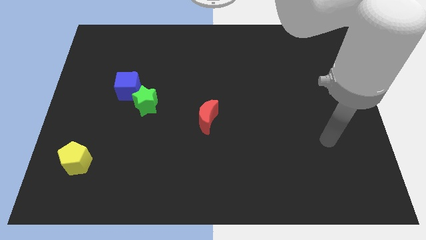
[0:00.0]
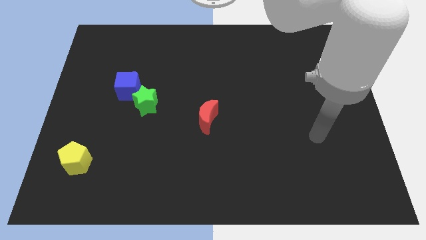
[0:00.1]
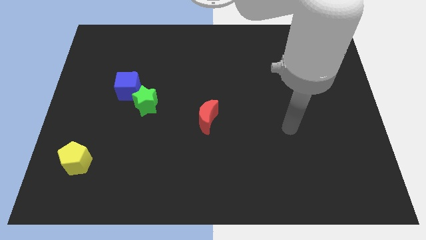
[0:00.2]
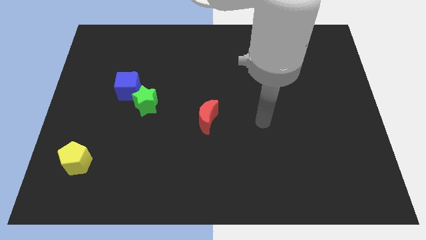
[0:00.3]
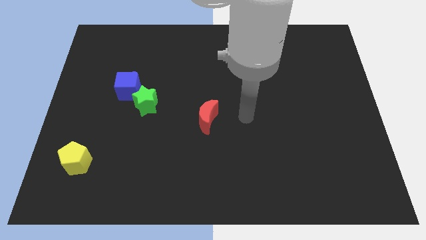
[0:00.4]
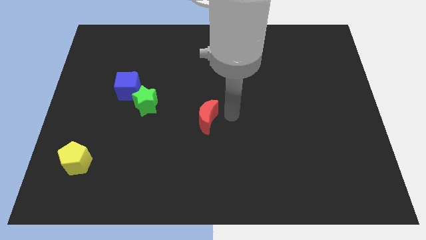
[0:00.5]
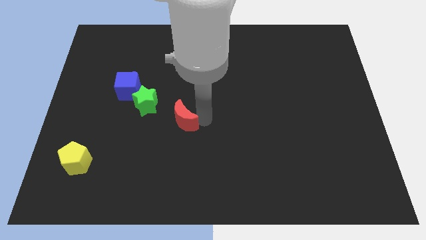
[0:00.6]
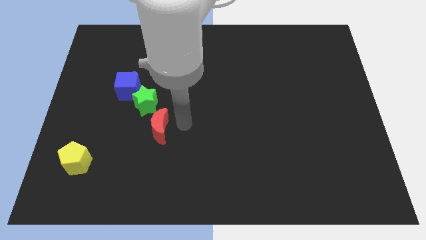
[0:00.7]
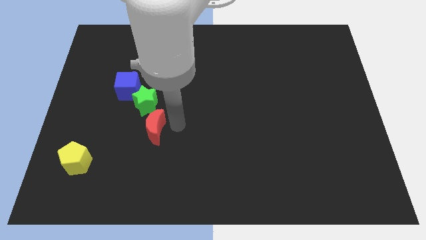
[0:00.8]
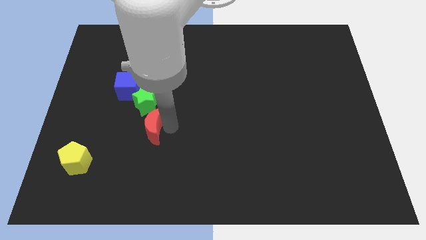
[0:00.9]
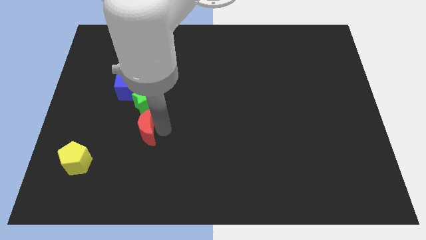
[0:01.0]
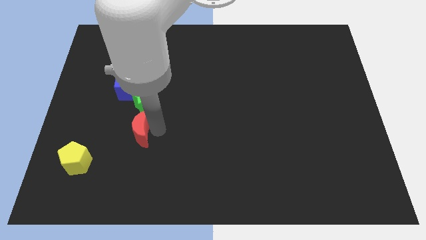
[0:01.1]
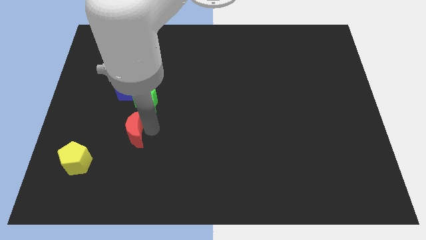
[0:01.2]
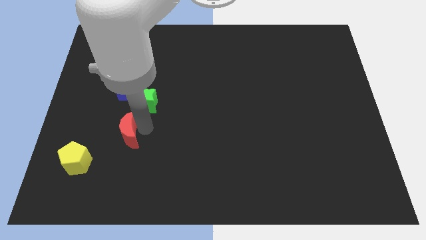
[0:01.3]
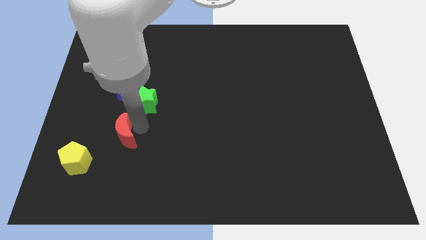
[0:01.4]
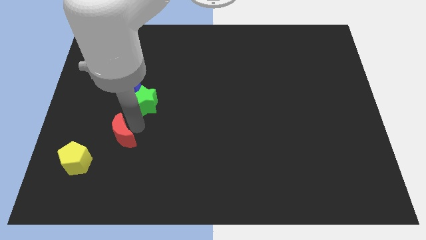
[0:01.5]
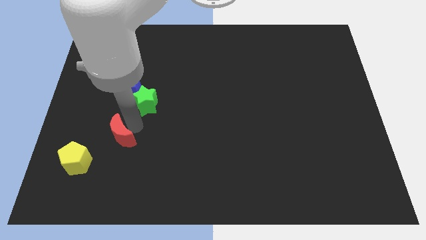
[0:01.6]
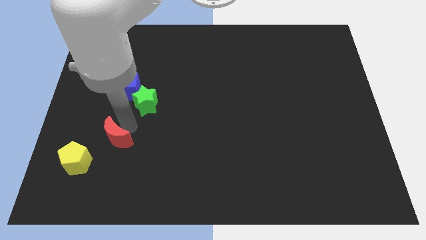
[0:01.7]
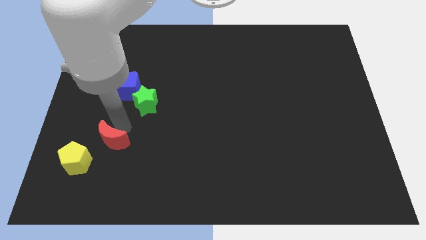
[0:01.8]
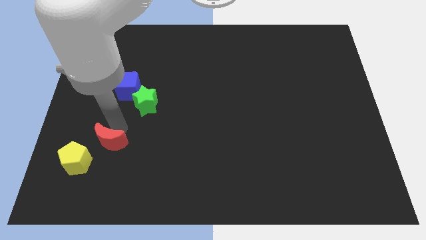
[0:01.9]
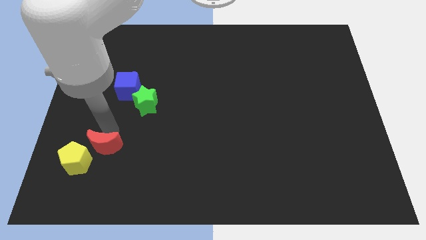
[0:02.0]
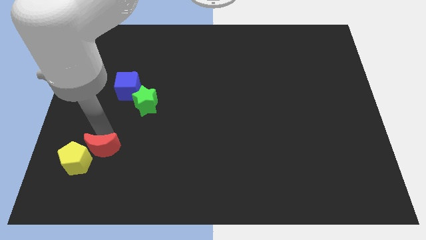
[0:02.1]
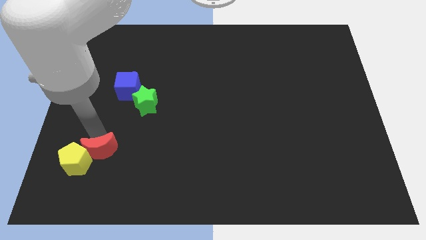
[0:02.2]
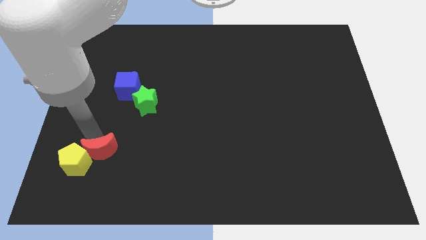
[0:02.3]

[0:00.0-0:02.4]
put the red moon next to the yellow pentagon

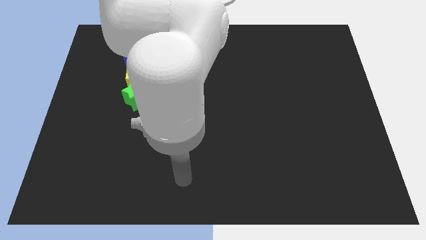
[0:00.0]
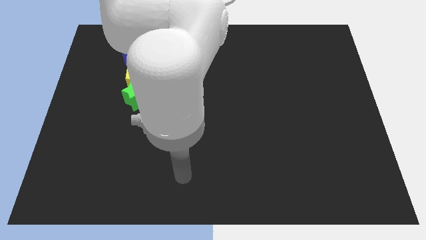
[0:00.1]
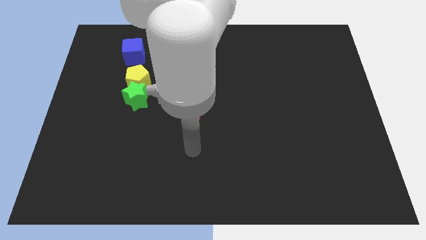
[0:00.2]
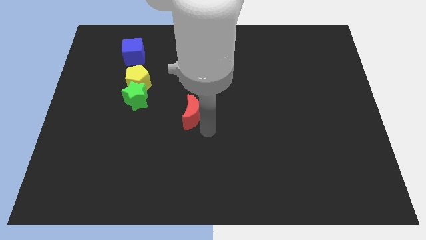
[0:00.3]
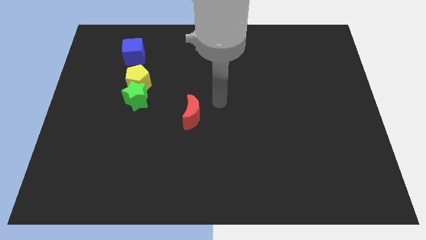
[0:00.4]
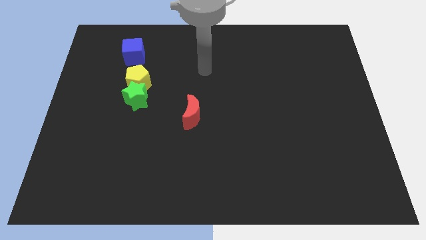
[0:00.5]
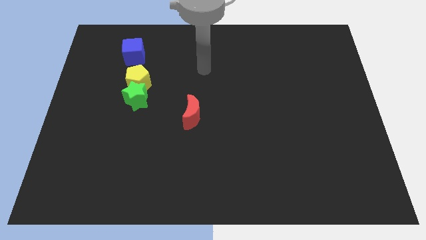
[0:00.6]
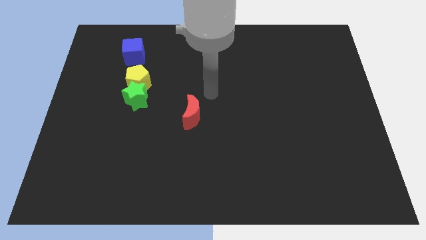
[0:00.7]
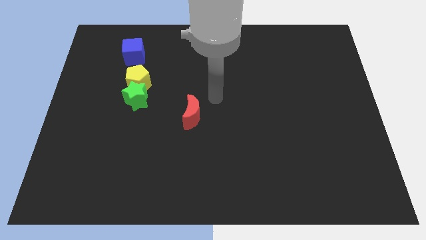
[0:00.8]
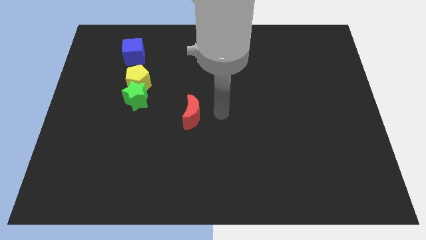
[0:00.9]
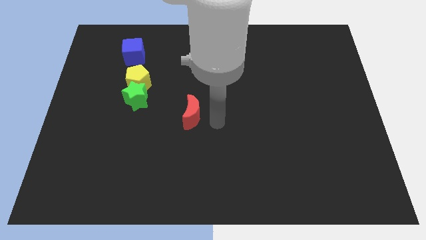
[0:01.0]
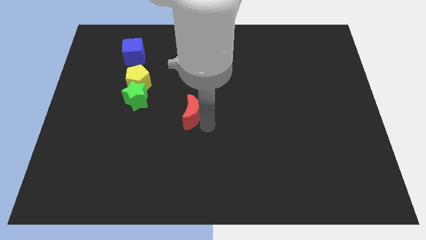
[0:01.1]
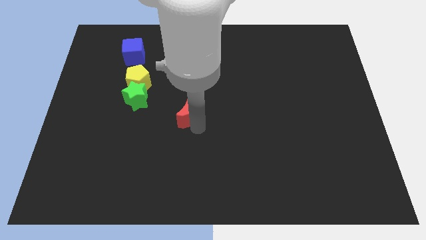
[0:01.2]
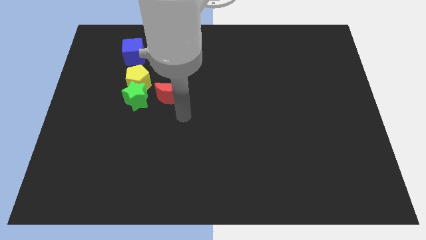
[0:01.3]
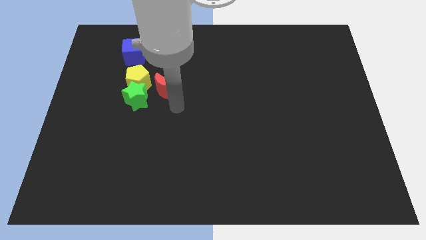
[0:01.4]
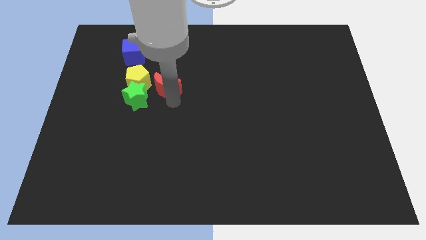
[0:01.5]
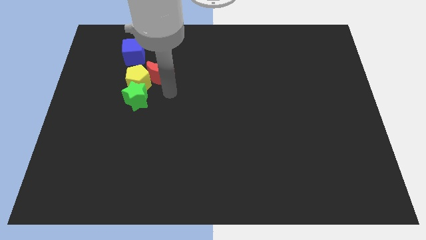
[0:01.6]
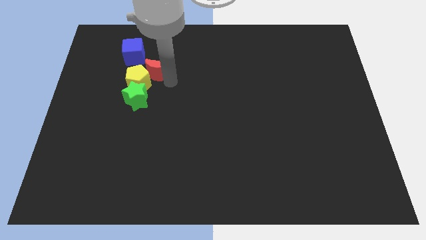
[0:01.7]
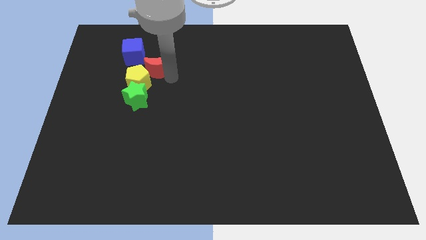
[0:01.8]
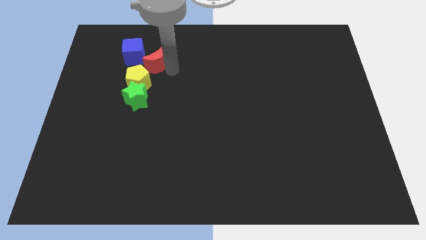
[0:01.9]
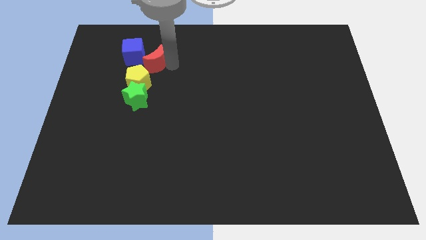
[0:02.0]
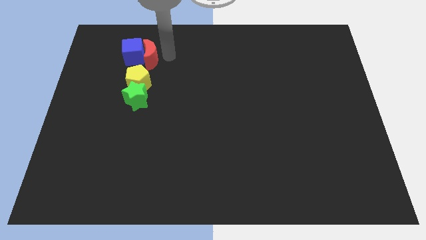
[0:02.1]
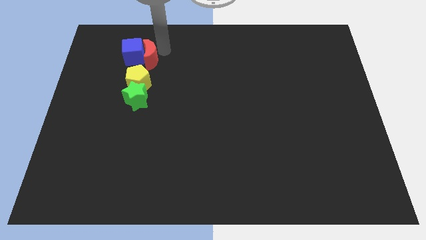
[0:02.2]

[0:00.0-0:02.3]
put the red moon to the blue cube

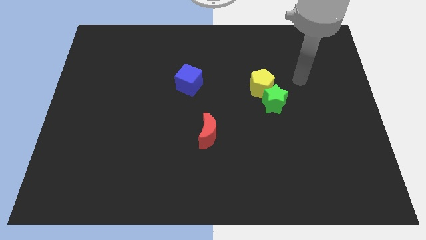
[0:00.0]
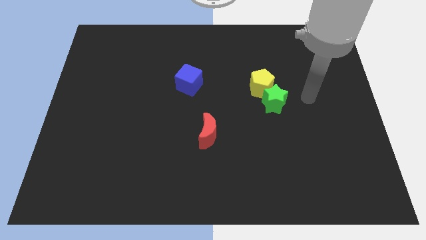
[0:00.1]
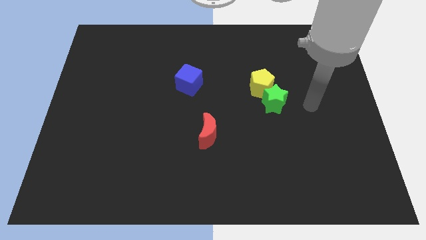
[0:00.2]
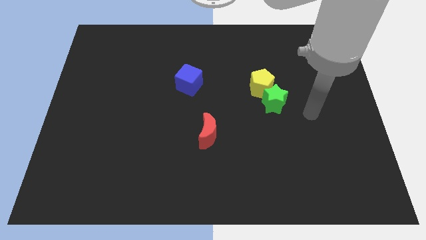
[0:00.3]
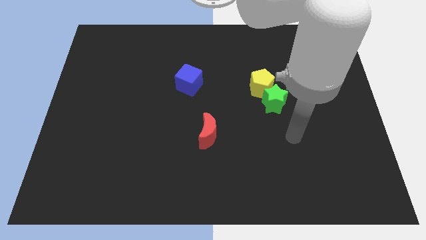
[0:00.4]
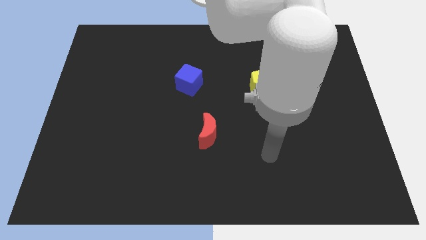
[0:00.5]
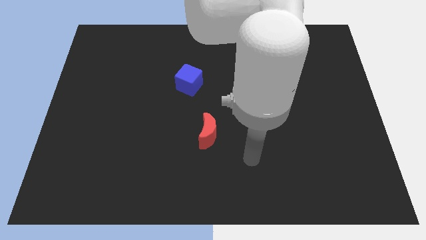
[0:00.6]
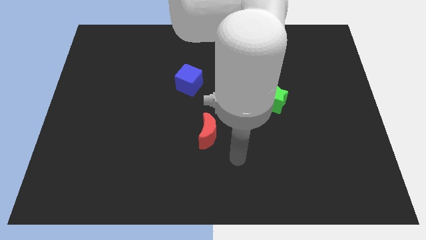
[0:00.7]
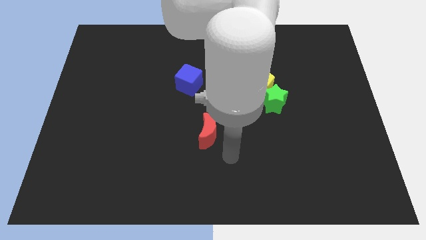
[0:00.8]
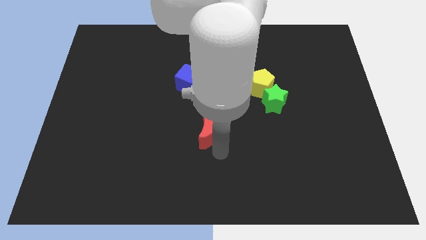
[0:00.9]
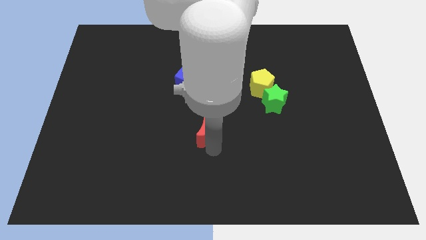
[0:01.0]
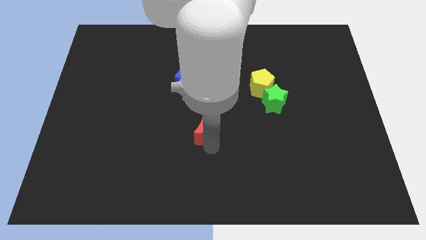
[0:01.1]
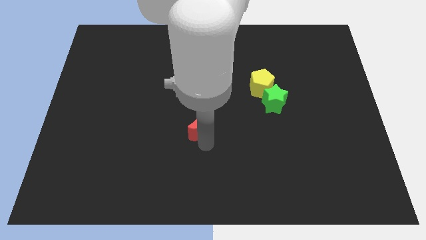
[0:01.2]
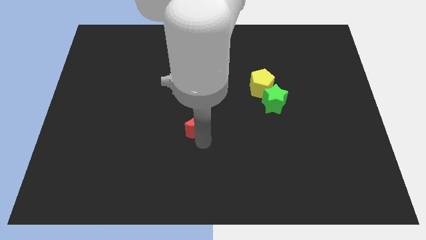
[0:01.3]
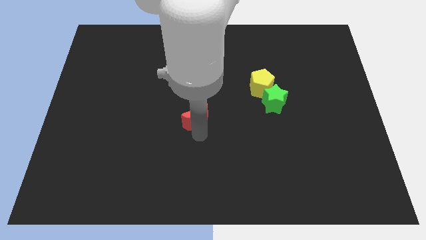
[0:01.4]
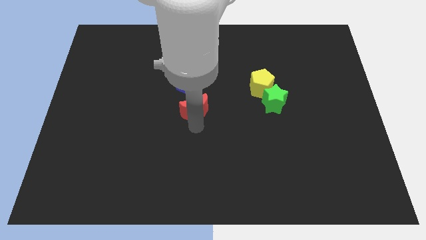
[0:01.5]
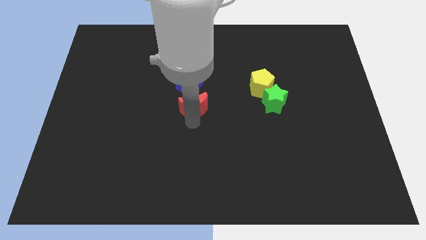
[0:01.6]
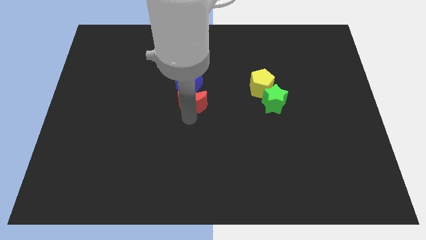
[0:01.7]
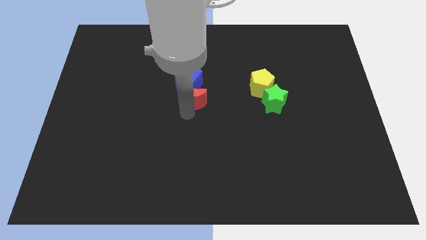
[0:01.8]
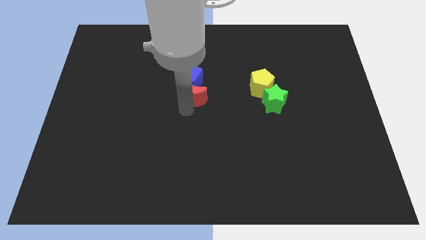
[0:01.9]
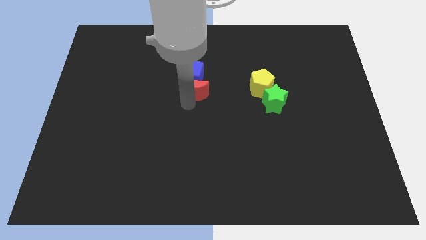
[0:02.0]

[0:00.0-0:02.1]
put the moon towards the cube

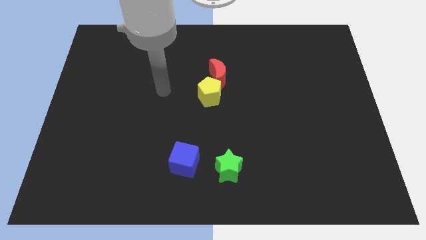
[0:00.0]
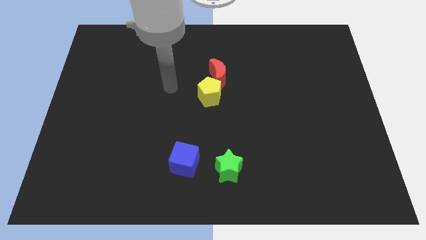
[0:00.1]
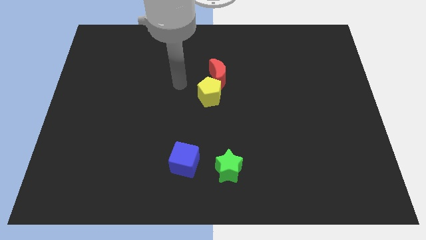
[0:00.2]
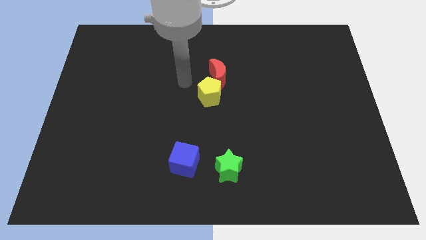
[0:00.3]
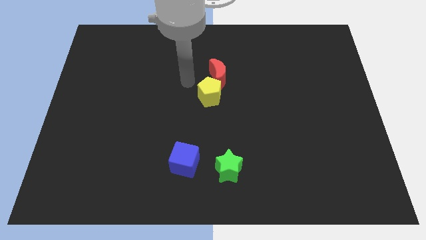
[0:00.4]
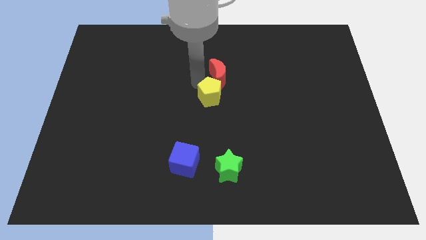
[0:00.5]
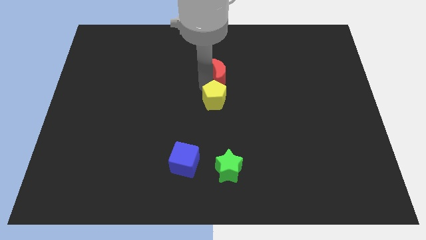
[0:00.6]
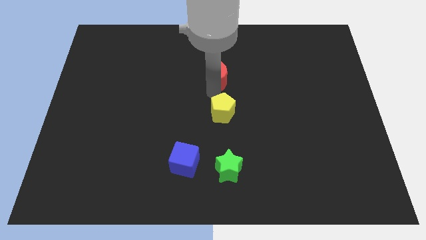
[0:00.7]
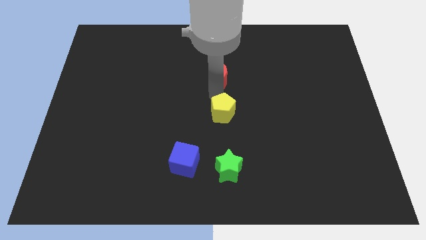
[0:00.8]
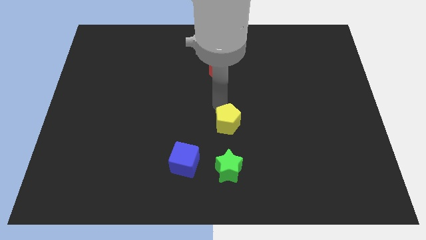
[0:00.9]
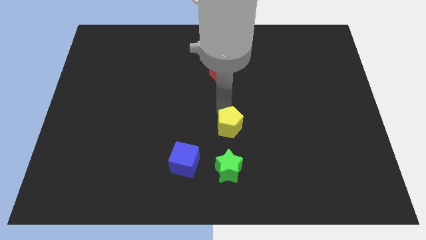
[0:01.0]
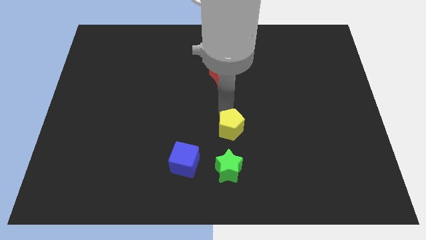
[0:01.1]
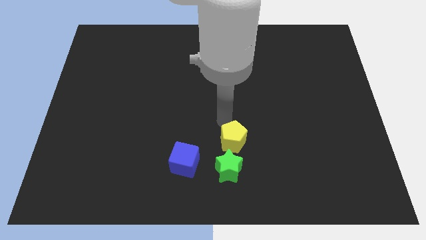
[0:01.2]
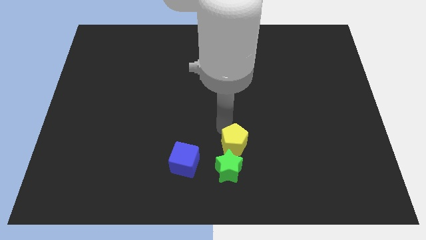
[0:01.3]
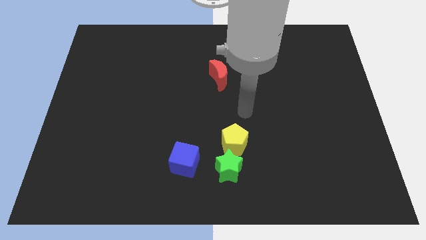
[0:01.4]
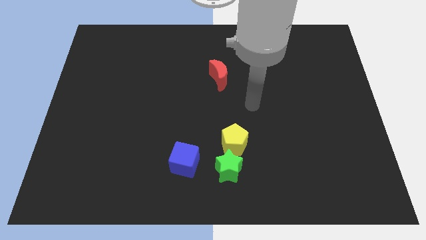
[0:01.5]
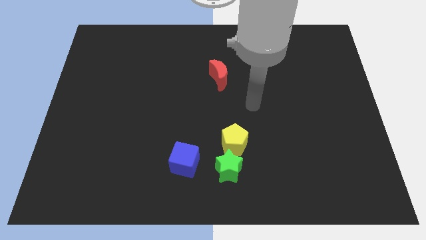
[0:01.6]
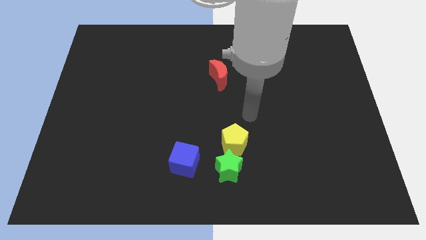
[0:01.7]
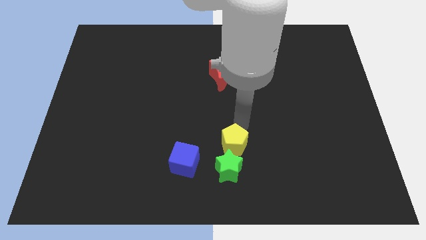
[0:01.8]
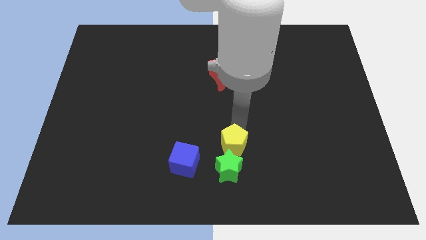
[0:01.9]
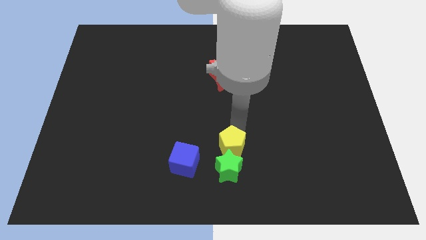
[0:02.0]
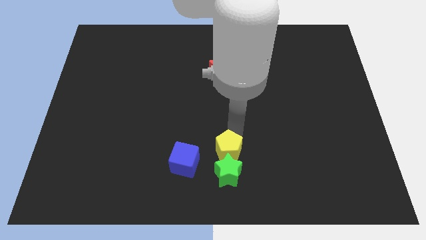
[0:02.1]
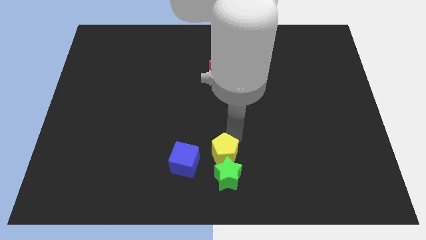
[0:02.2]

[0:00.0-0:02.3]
push the pentagon next to the green star
